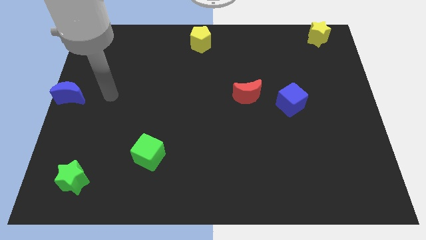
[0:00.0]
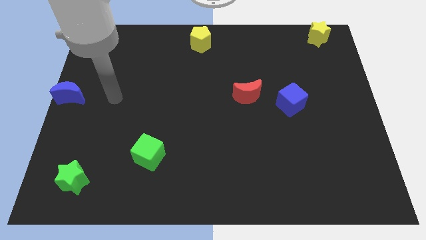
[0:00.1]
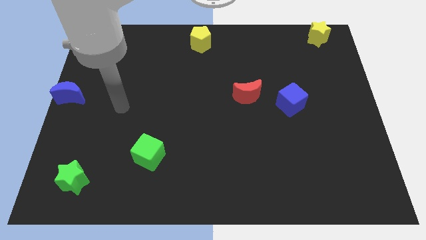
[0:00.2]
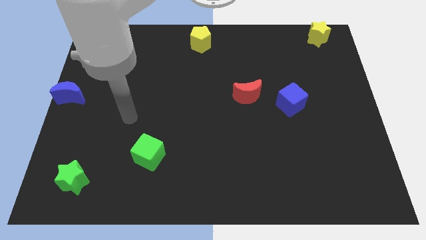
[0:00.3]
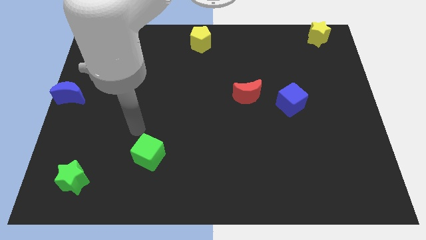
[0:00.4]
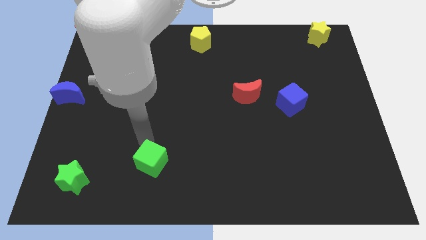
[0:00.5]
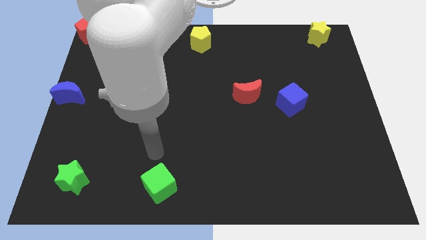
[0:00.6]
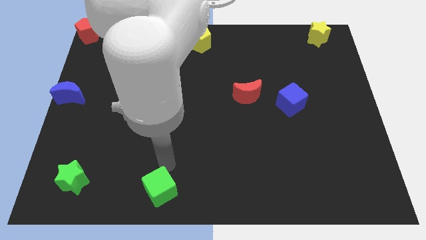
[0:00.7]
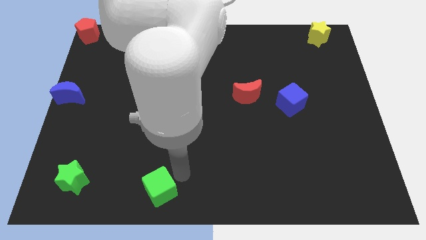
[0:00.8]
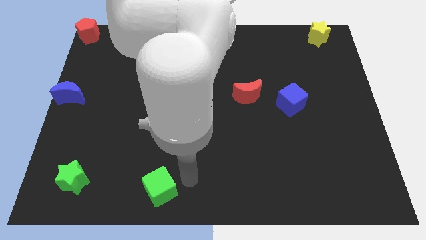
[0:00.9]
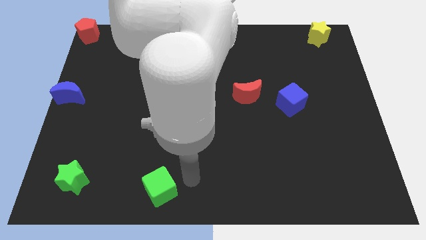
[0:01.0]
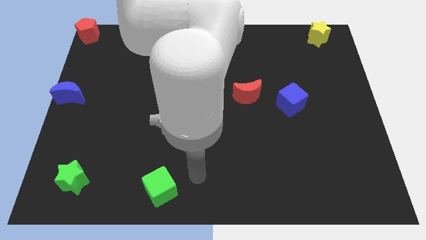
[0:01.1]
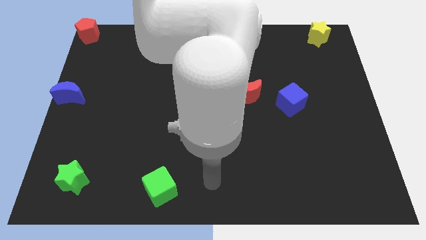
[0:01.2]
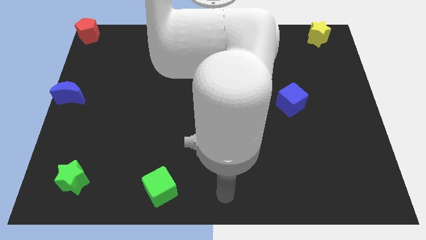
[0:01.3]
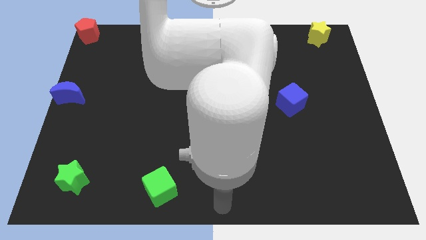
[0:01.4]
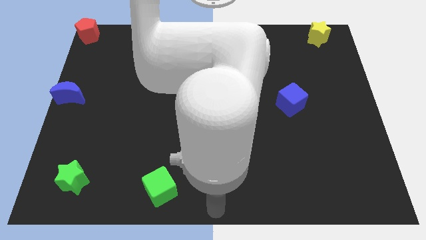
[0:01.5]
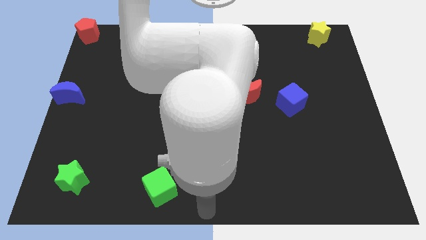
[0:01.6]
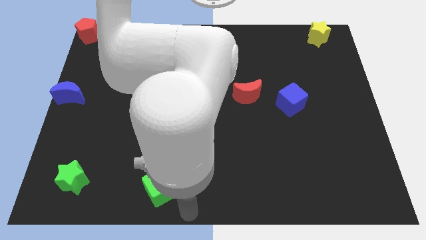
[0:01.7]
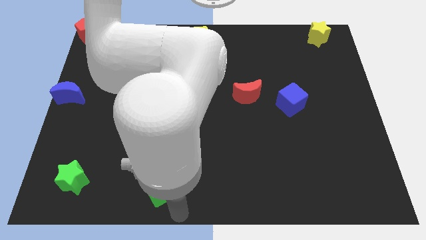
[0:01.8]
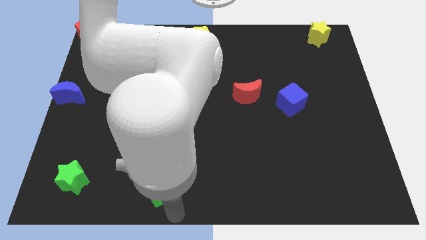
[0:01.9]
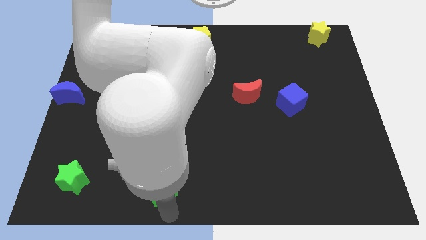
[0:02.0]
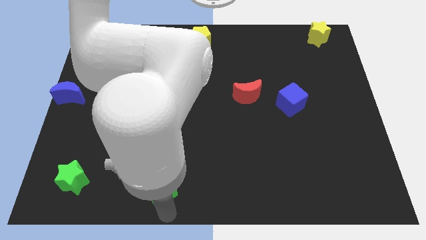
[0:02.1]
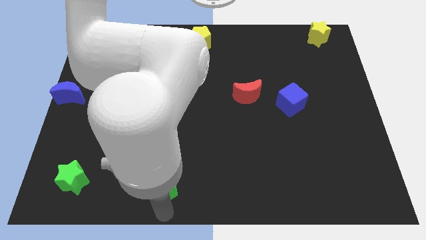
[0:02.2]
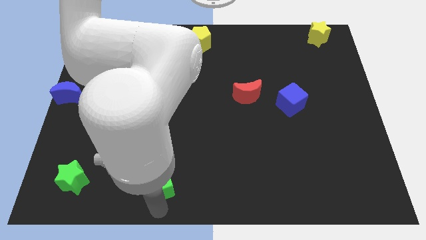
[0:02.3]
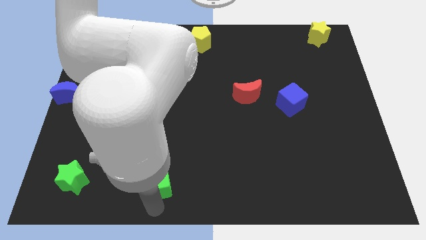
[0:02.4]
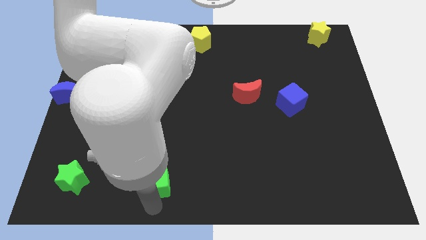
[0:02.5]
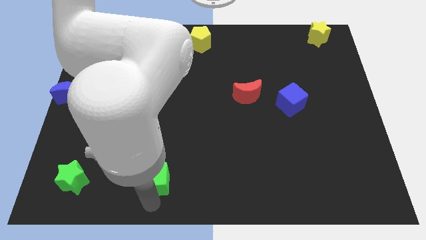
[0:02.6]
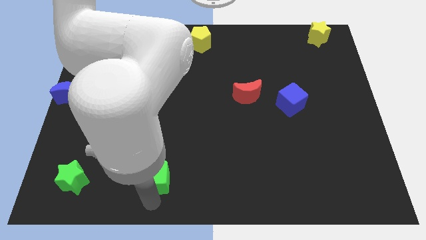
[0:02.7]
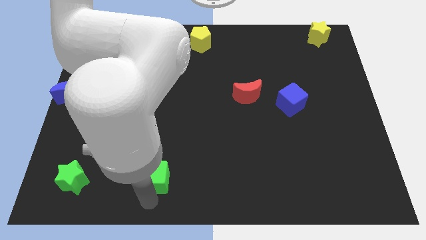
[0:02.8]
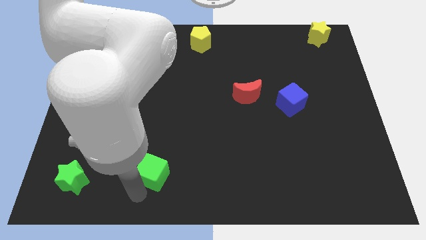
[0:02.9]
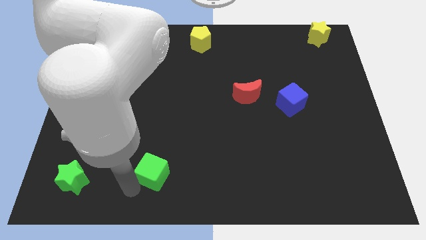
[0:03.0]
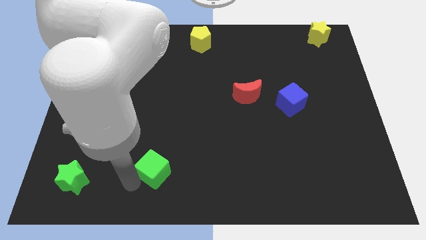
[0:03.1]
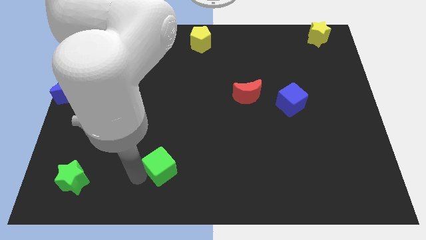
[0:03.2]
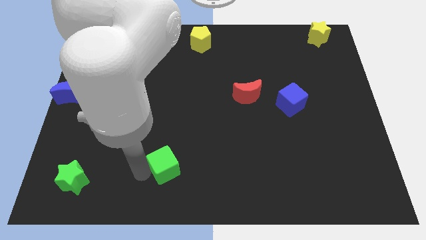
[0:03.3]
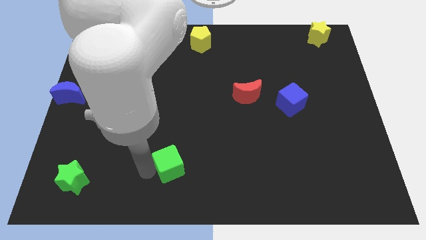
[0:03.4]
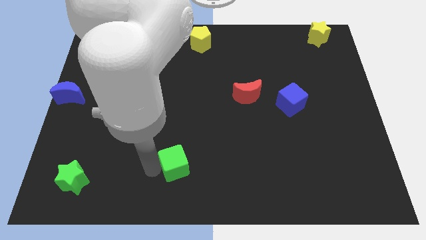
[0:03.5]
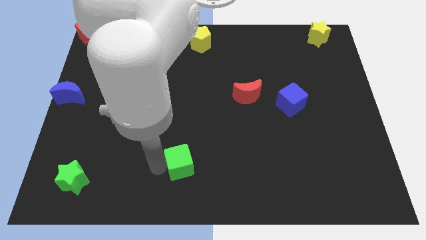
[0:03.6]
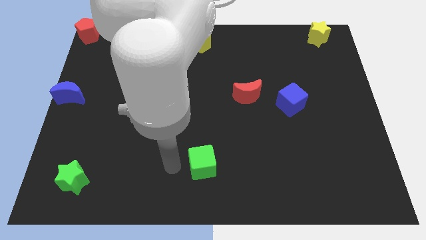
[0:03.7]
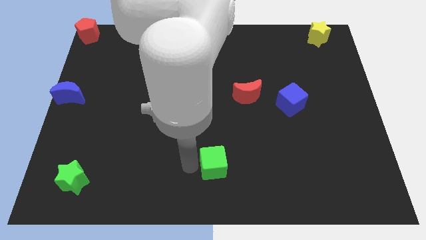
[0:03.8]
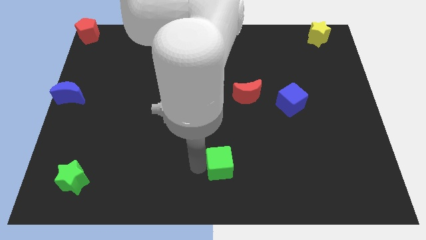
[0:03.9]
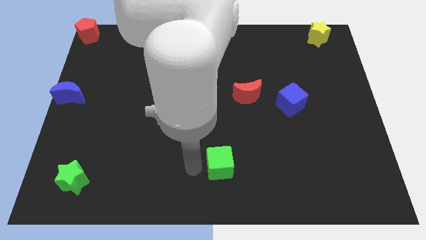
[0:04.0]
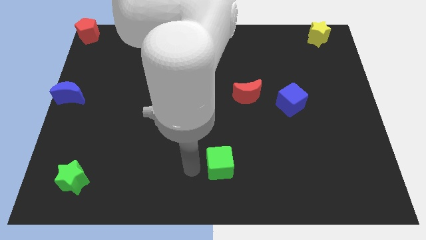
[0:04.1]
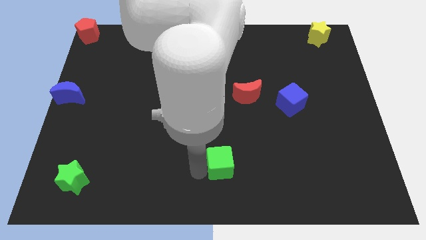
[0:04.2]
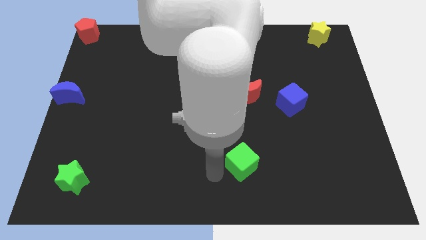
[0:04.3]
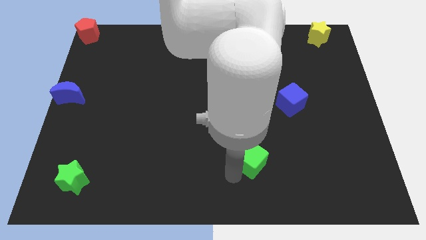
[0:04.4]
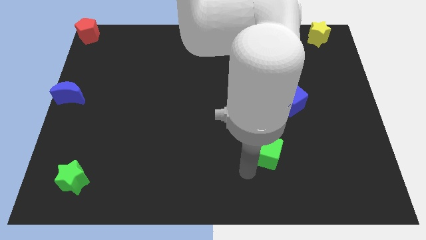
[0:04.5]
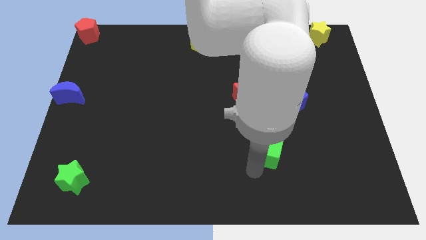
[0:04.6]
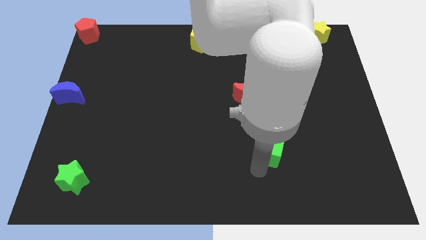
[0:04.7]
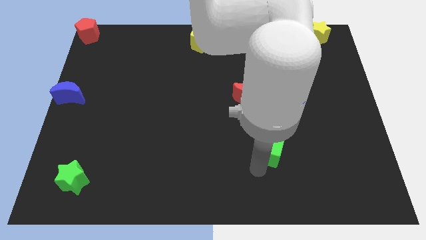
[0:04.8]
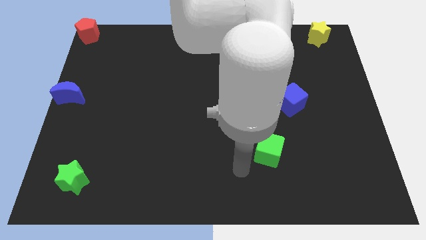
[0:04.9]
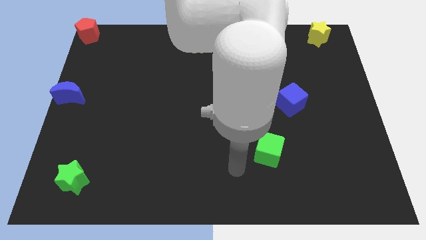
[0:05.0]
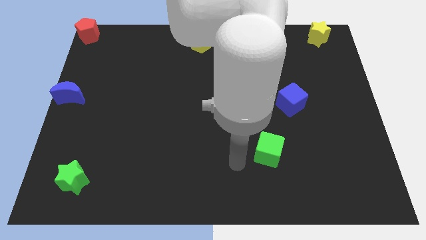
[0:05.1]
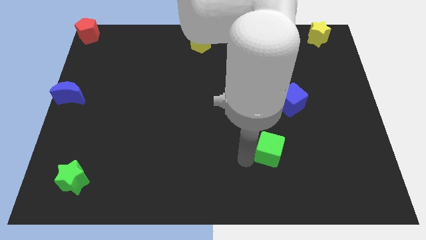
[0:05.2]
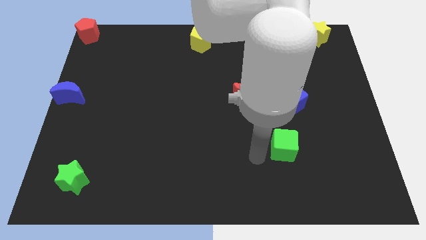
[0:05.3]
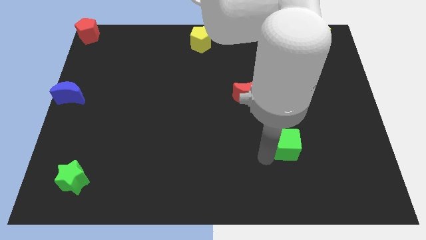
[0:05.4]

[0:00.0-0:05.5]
push the green cube diagonally bottom right to the red moon

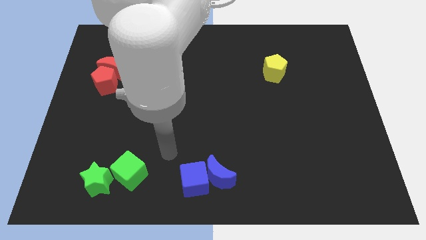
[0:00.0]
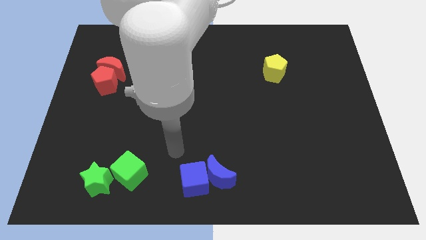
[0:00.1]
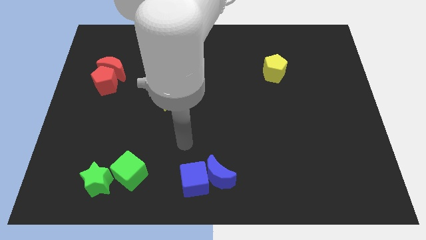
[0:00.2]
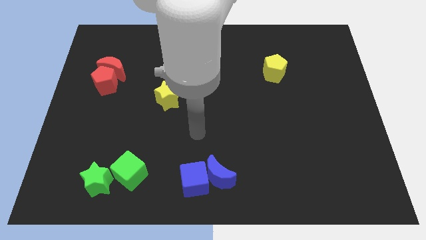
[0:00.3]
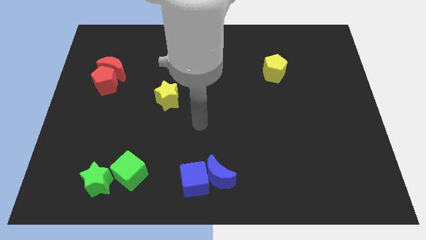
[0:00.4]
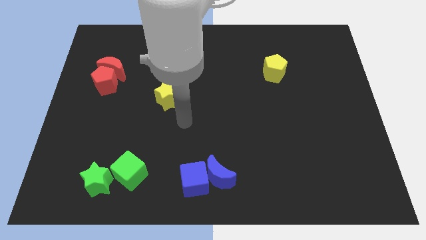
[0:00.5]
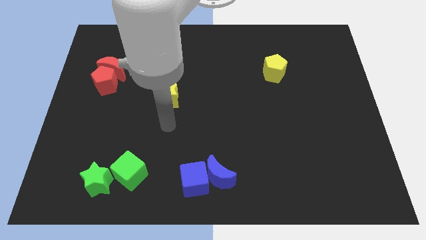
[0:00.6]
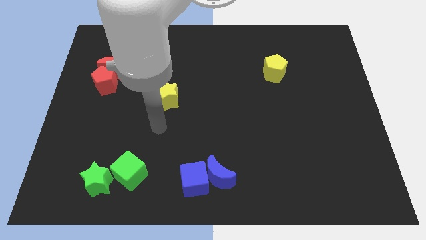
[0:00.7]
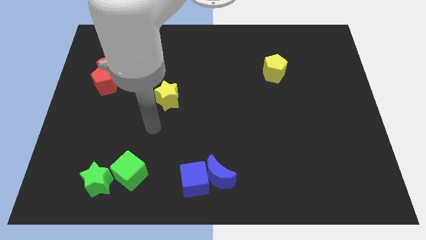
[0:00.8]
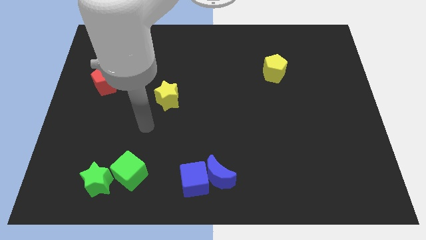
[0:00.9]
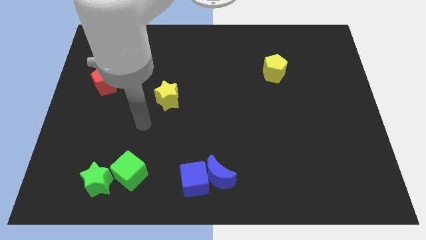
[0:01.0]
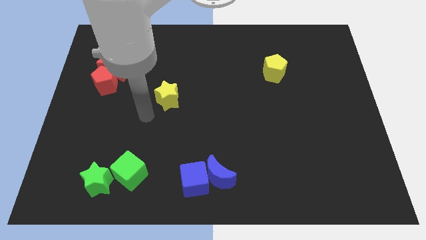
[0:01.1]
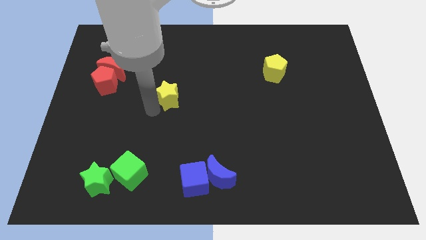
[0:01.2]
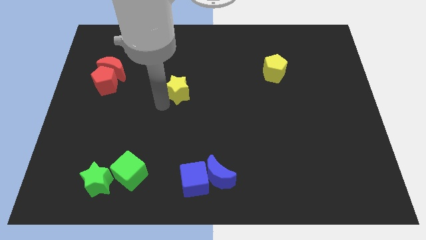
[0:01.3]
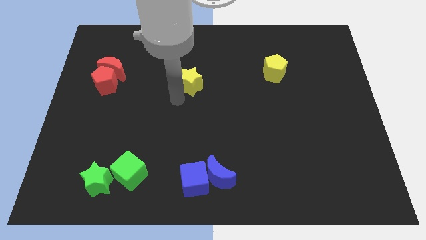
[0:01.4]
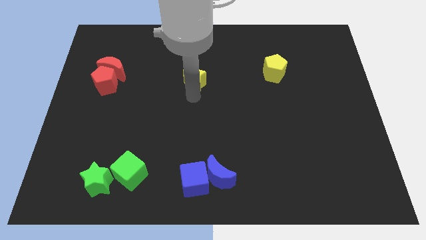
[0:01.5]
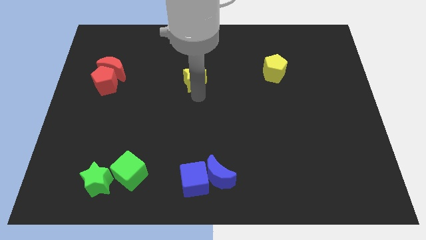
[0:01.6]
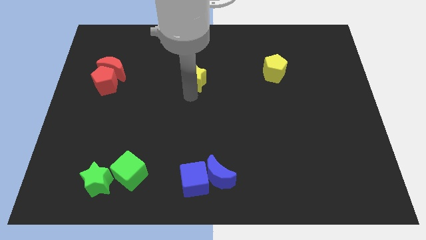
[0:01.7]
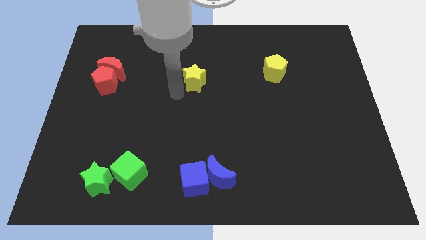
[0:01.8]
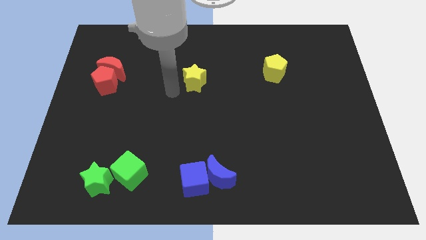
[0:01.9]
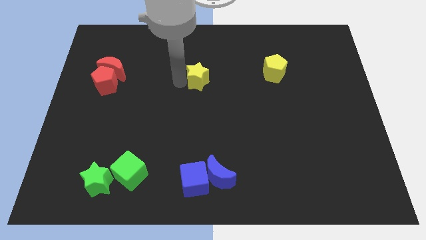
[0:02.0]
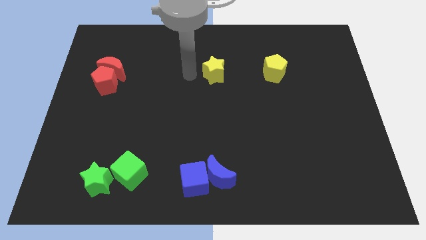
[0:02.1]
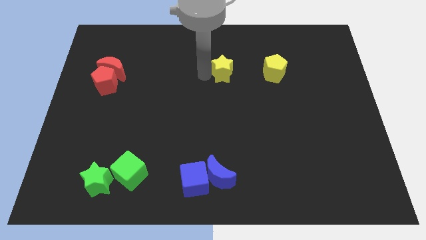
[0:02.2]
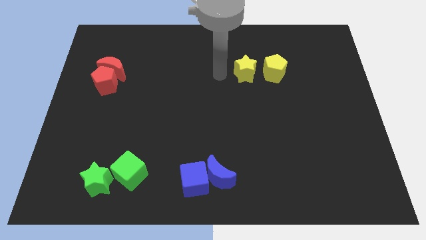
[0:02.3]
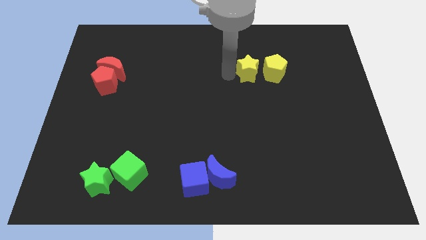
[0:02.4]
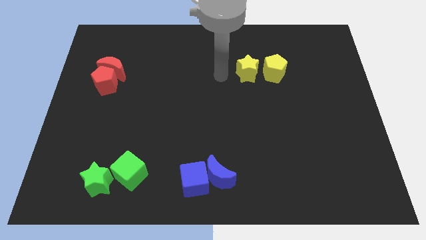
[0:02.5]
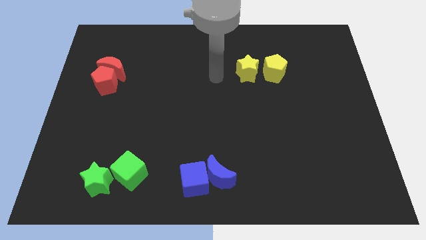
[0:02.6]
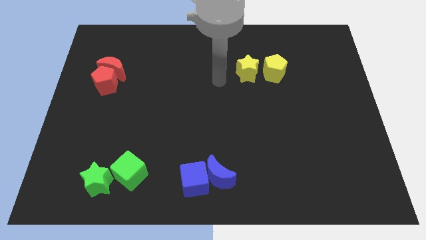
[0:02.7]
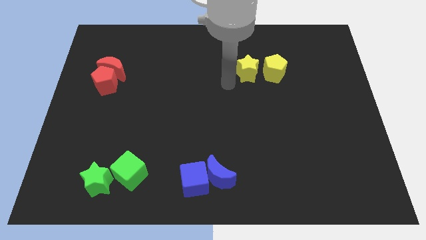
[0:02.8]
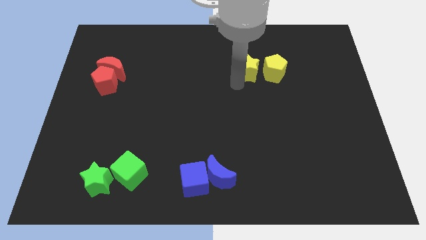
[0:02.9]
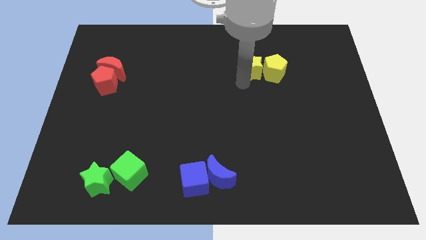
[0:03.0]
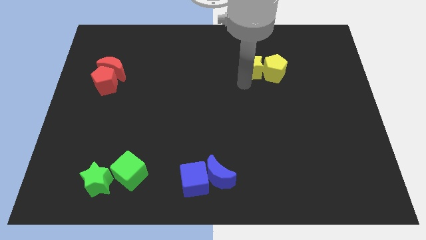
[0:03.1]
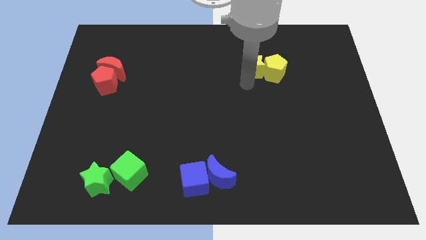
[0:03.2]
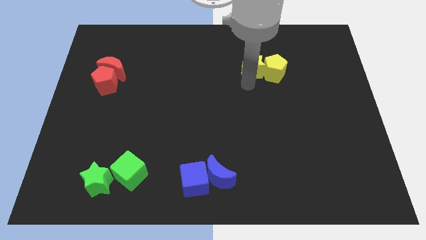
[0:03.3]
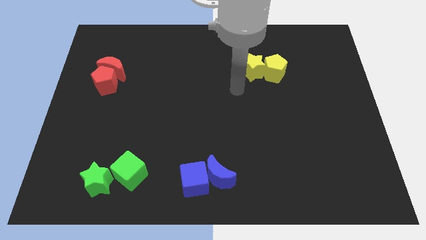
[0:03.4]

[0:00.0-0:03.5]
move the yellow star to the left of the yellow pentagon
